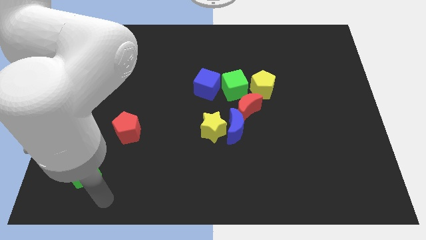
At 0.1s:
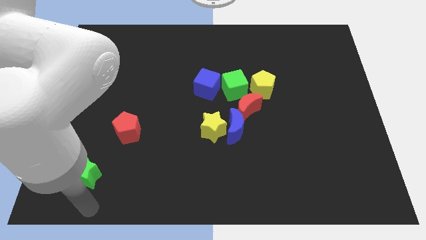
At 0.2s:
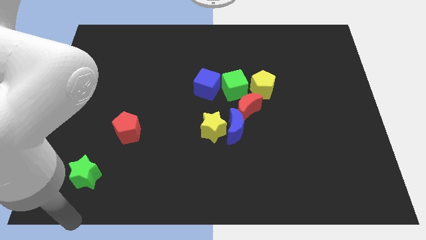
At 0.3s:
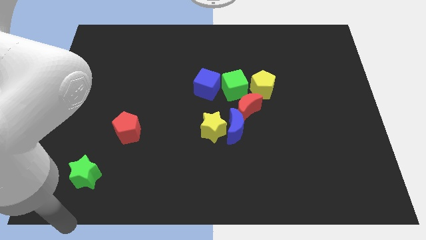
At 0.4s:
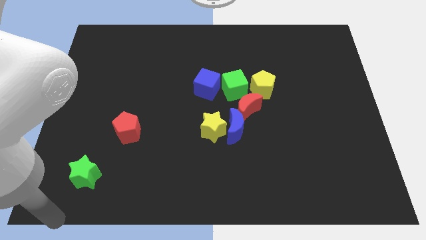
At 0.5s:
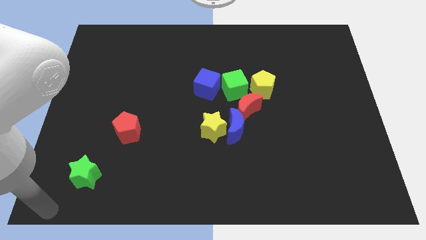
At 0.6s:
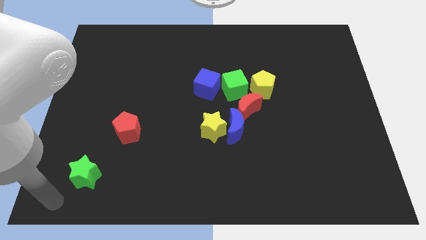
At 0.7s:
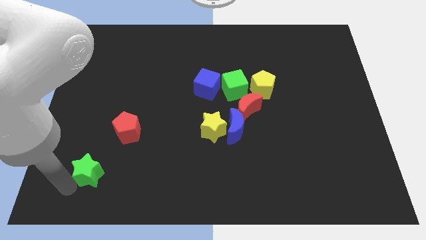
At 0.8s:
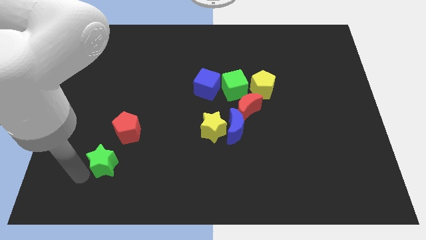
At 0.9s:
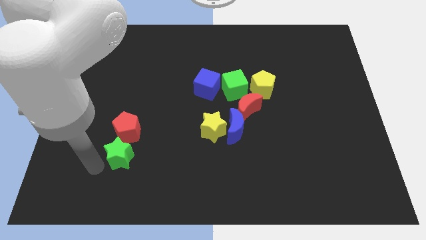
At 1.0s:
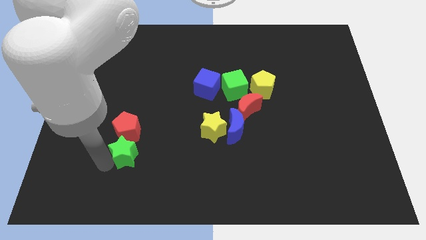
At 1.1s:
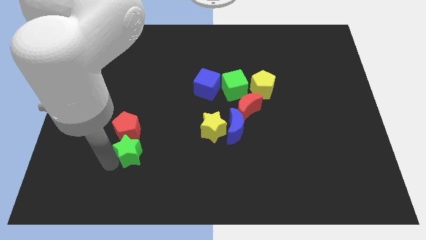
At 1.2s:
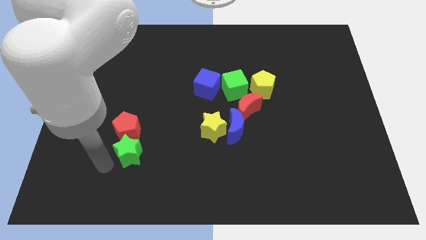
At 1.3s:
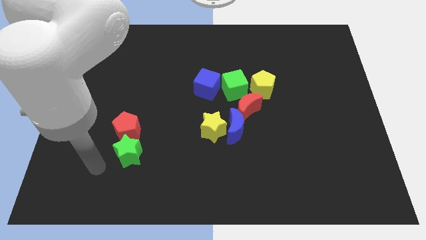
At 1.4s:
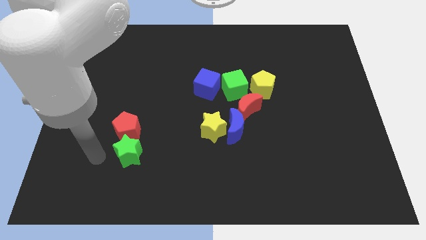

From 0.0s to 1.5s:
place the green star under the red pentagon

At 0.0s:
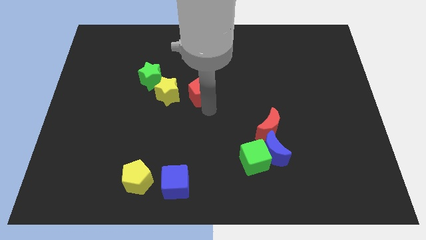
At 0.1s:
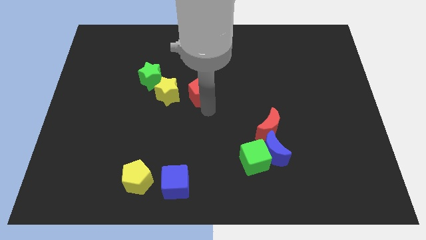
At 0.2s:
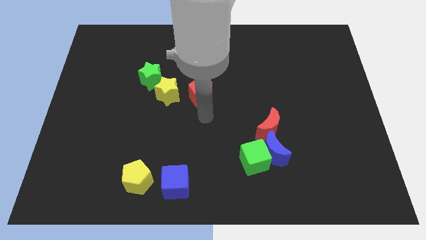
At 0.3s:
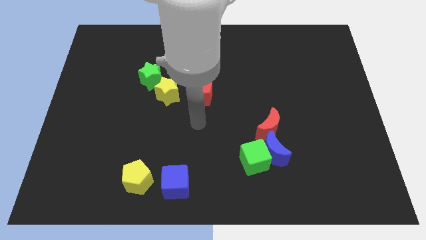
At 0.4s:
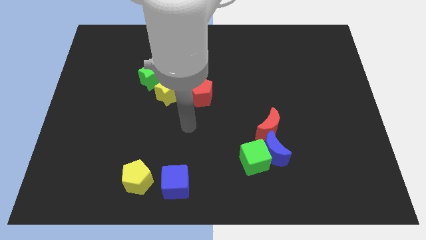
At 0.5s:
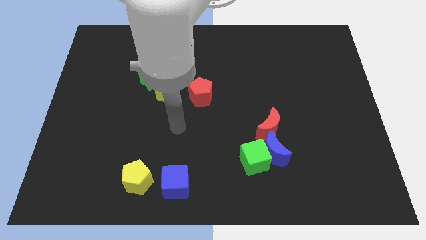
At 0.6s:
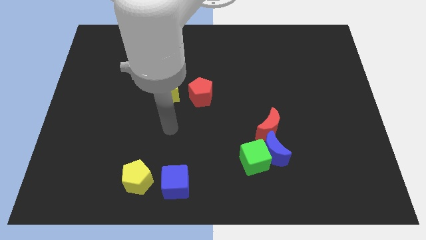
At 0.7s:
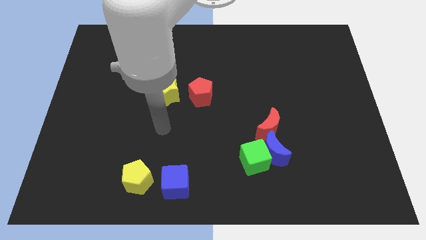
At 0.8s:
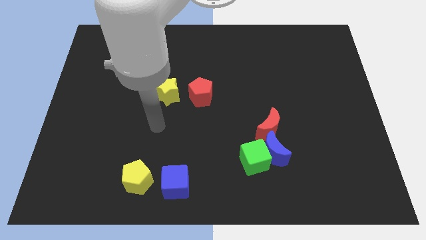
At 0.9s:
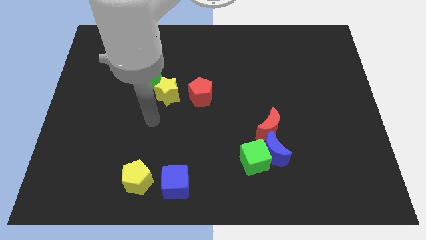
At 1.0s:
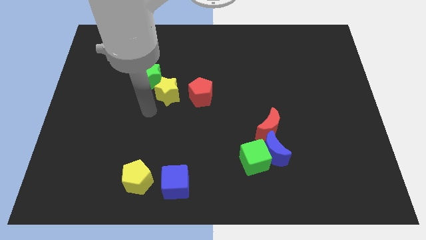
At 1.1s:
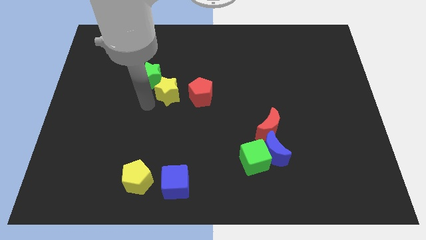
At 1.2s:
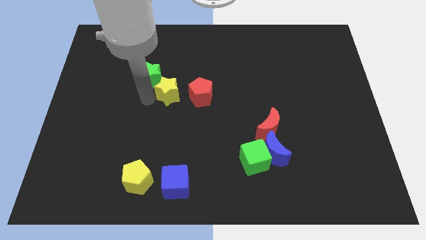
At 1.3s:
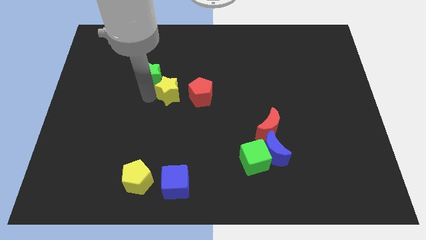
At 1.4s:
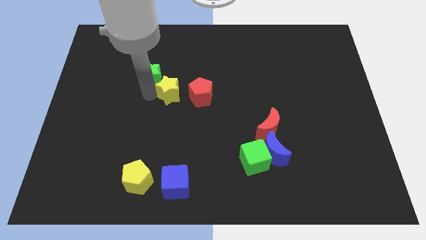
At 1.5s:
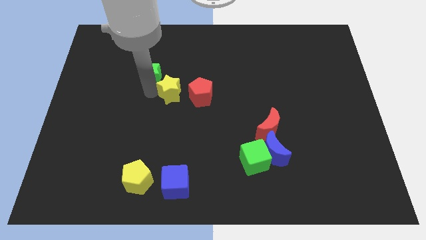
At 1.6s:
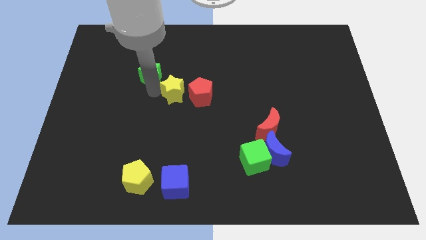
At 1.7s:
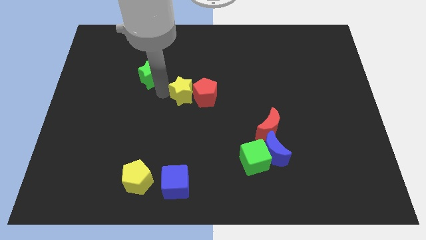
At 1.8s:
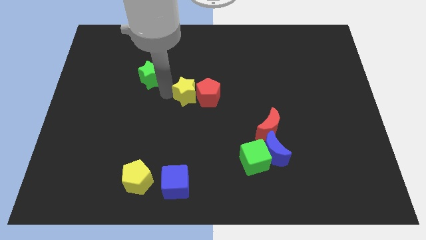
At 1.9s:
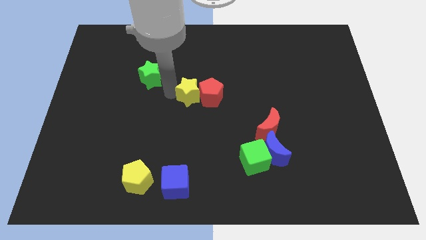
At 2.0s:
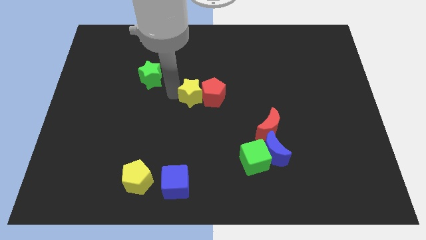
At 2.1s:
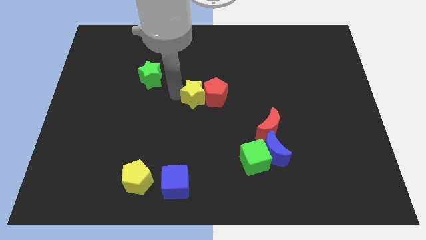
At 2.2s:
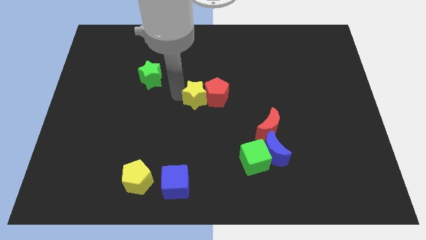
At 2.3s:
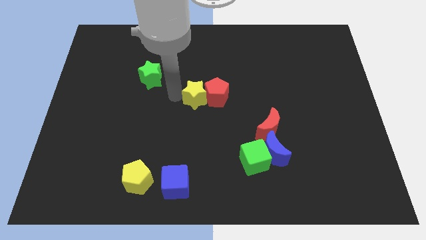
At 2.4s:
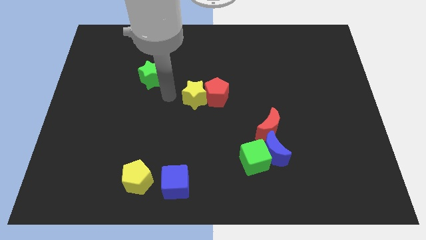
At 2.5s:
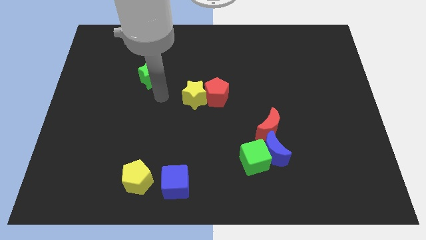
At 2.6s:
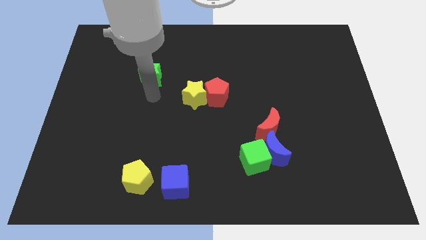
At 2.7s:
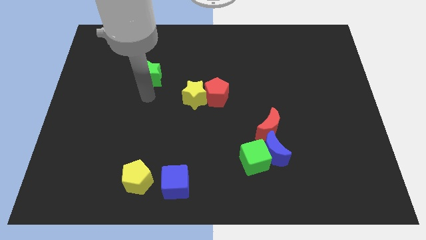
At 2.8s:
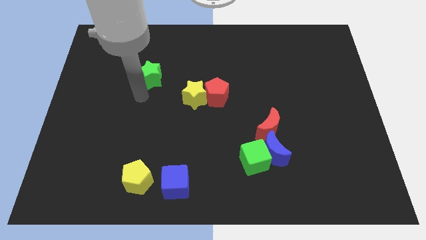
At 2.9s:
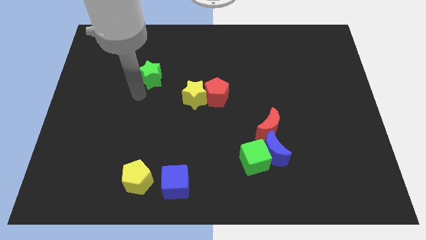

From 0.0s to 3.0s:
separate the green star and red pentagon from the yellow star

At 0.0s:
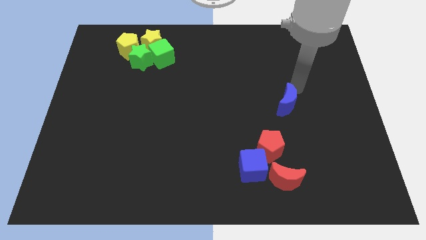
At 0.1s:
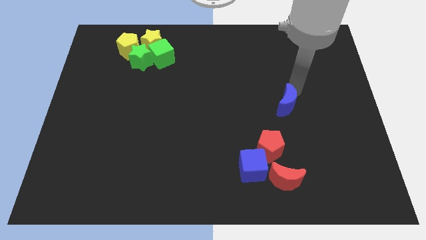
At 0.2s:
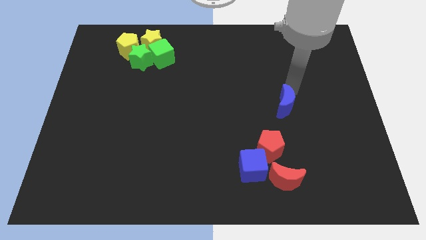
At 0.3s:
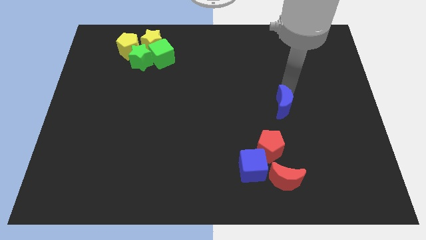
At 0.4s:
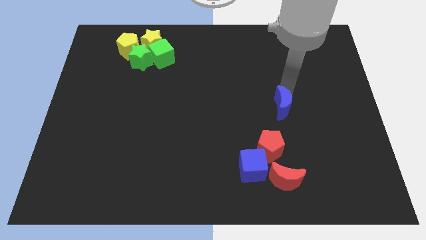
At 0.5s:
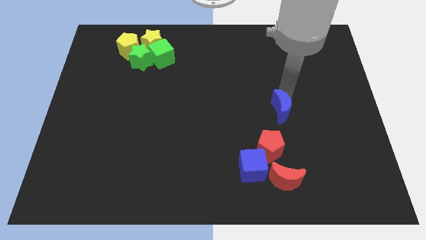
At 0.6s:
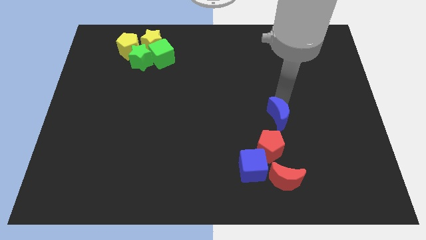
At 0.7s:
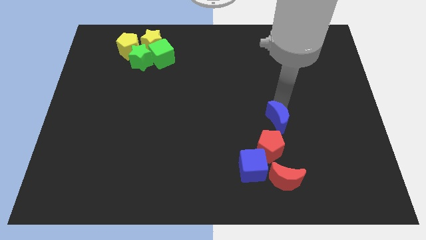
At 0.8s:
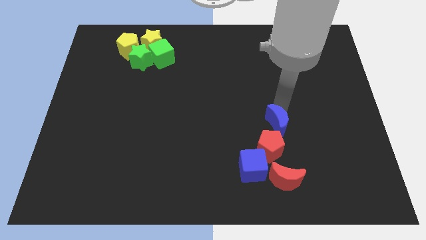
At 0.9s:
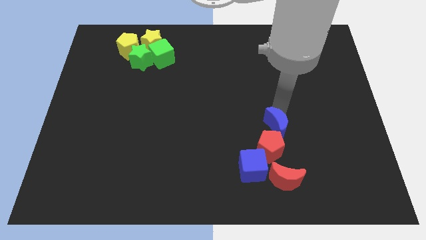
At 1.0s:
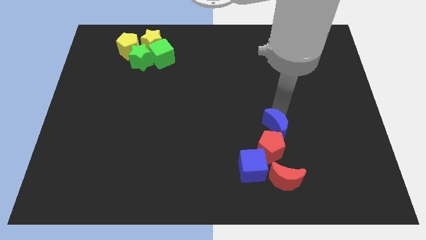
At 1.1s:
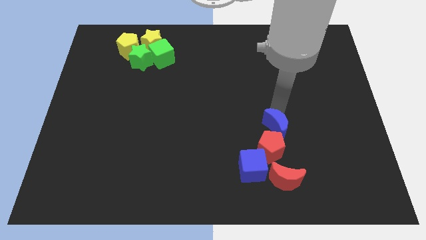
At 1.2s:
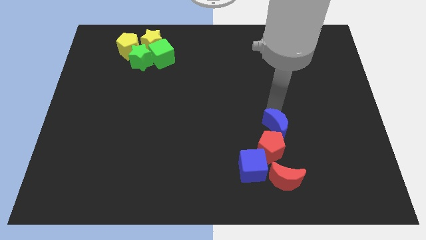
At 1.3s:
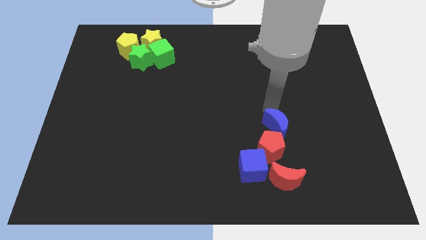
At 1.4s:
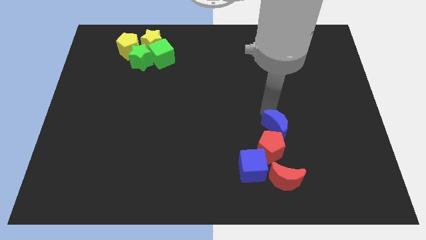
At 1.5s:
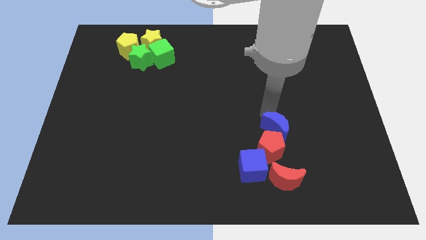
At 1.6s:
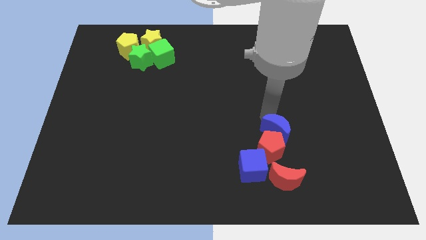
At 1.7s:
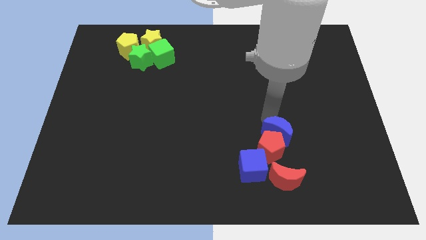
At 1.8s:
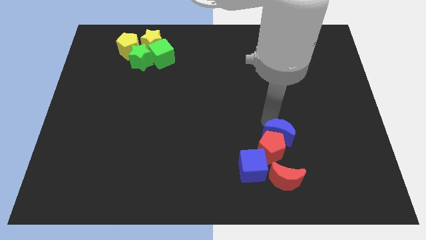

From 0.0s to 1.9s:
drag the blue crescent to the top side of the red pentagon

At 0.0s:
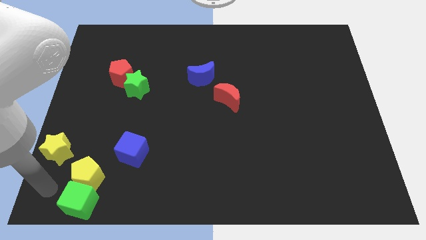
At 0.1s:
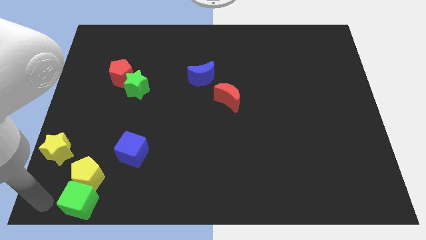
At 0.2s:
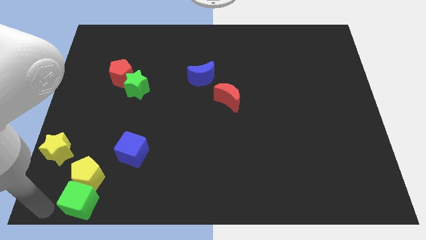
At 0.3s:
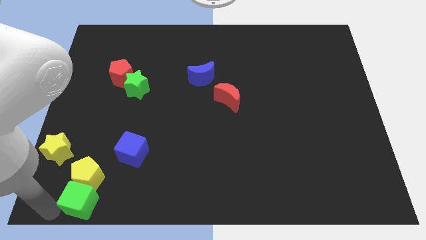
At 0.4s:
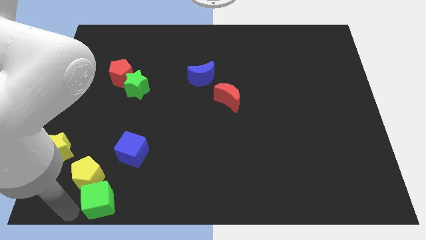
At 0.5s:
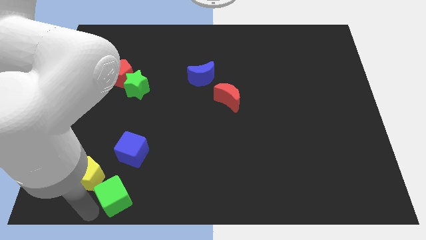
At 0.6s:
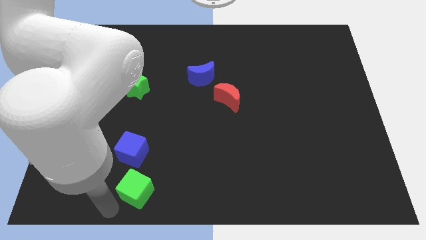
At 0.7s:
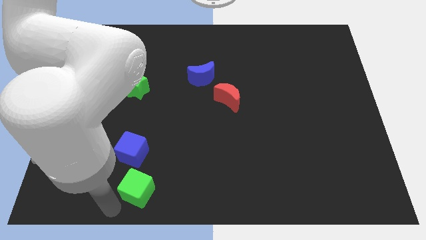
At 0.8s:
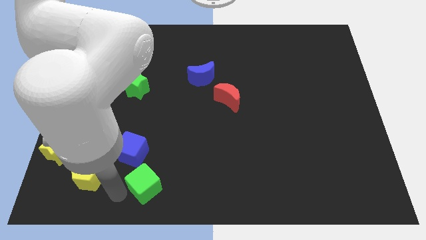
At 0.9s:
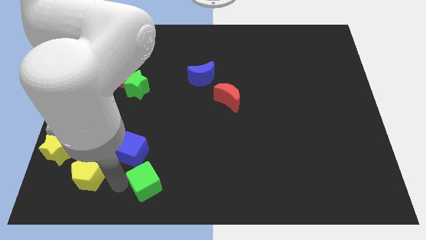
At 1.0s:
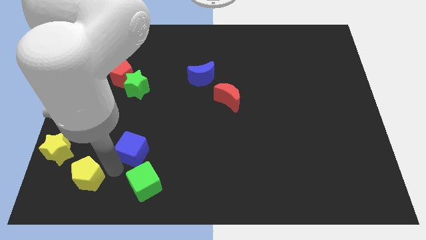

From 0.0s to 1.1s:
drag the green cube parallel right to the yellow pentagon

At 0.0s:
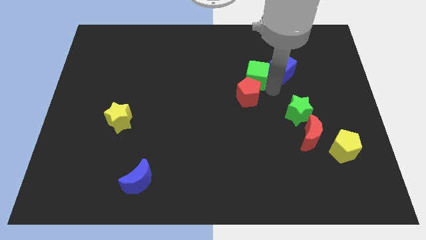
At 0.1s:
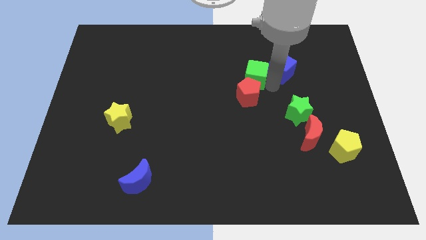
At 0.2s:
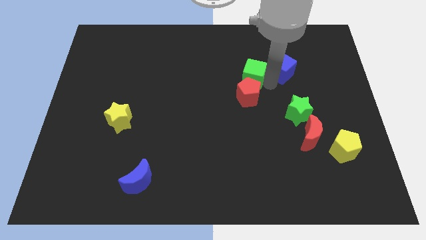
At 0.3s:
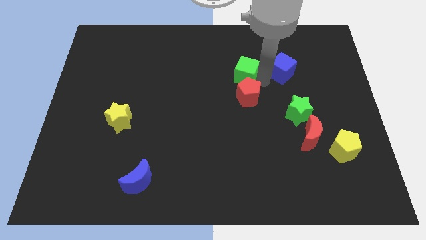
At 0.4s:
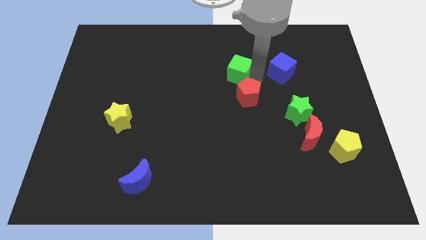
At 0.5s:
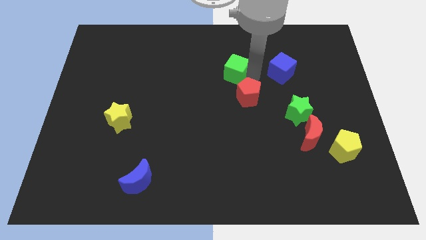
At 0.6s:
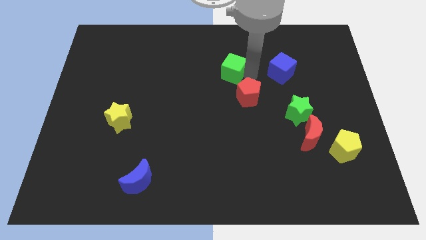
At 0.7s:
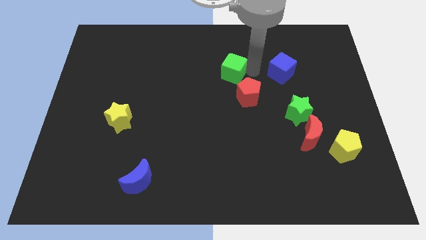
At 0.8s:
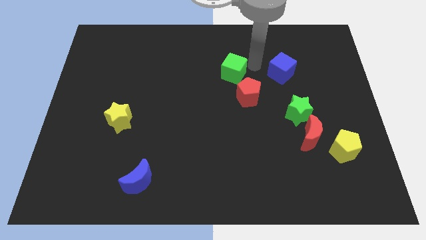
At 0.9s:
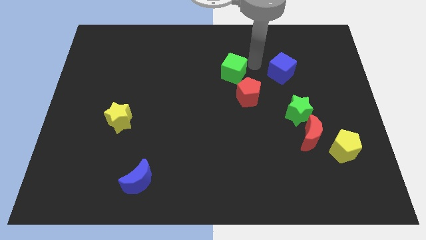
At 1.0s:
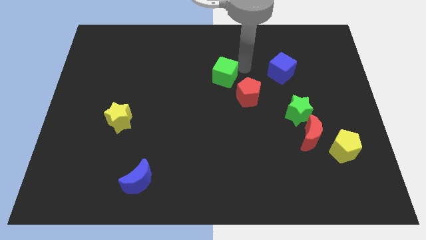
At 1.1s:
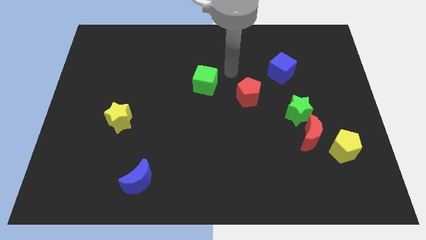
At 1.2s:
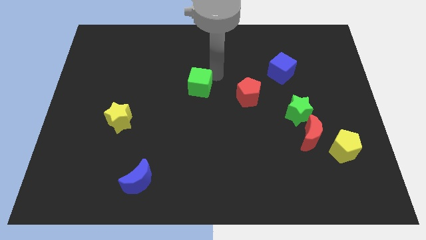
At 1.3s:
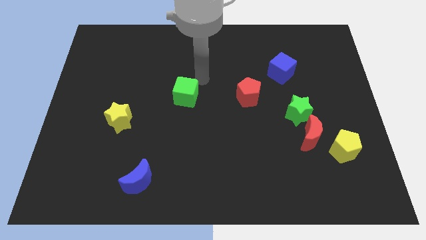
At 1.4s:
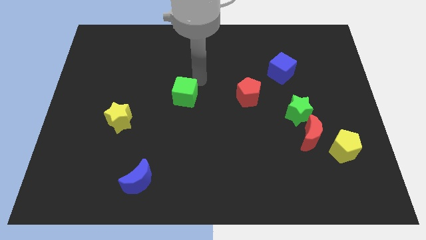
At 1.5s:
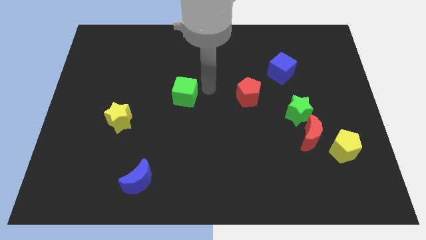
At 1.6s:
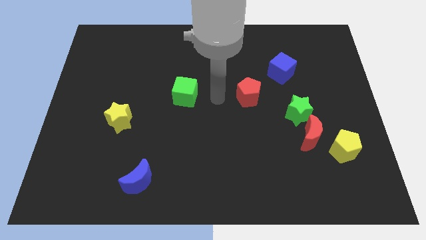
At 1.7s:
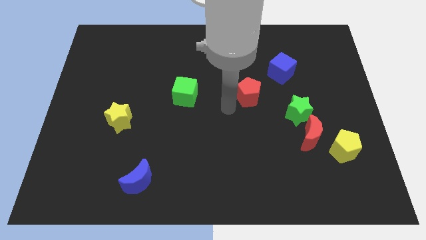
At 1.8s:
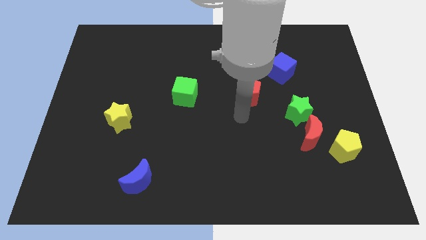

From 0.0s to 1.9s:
move the green cube to the center of the board
